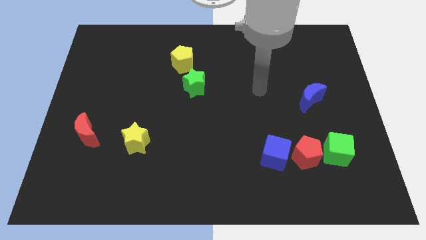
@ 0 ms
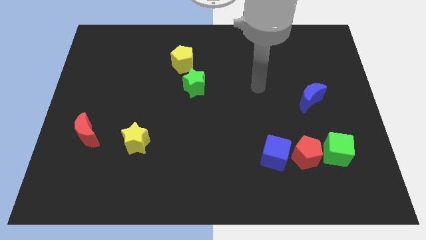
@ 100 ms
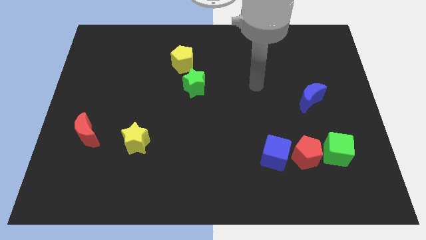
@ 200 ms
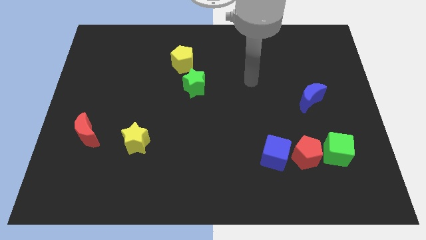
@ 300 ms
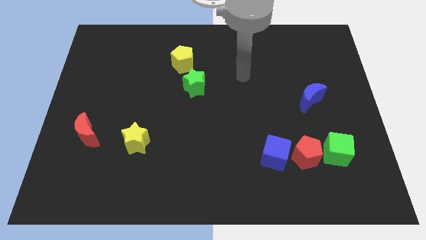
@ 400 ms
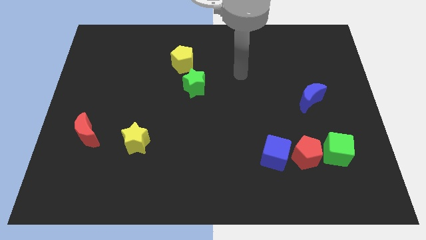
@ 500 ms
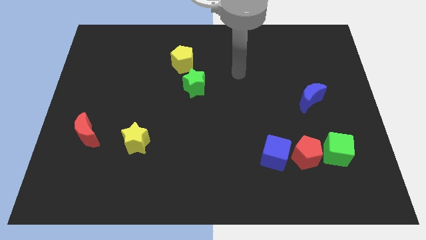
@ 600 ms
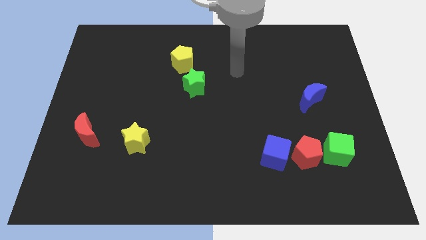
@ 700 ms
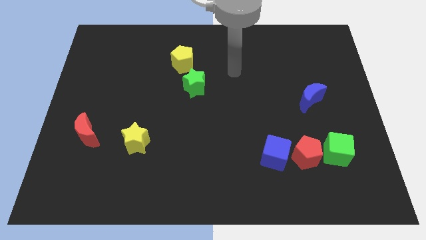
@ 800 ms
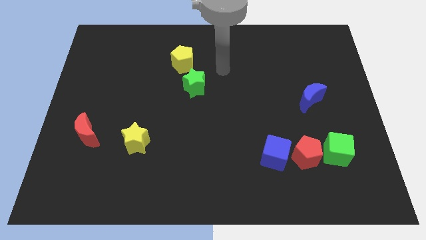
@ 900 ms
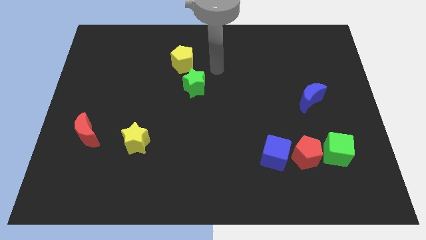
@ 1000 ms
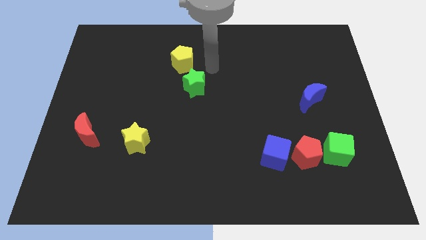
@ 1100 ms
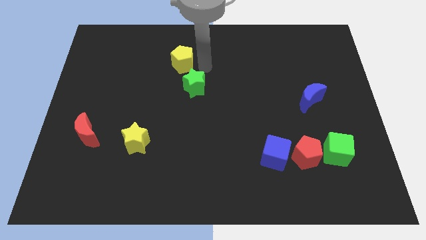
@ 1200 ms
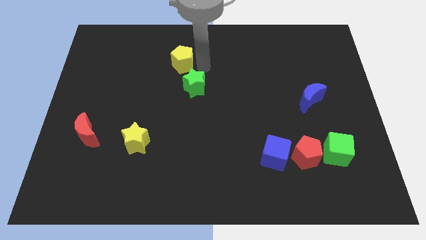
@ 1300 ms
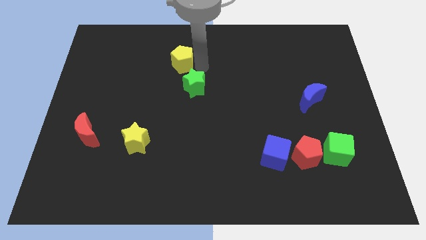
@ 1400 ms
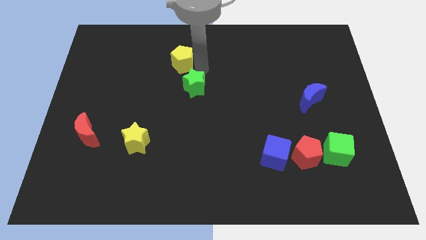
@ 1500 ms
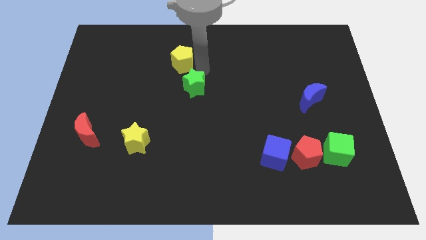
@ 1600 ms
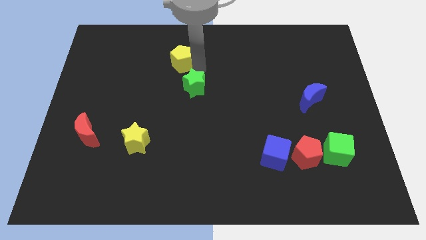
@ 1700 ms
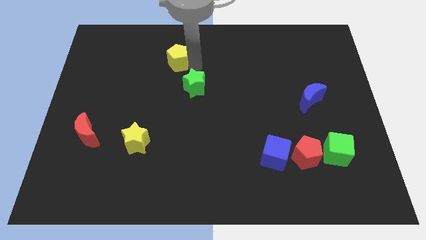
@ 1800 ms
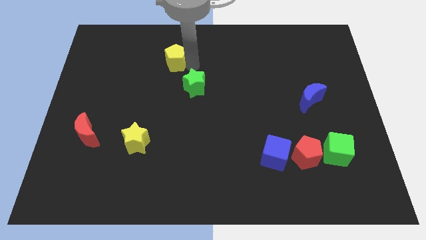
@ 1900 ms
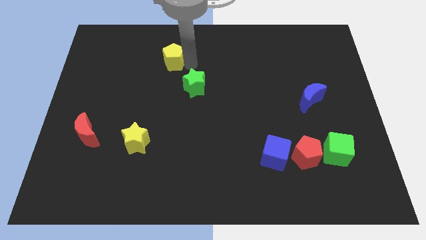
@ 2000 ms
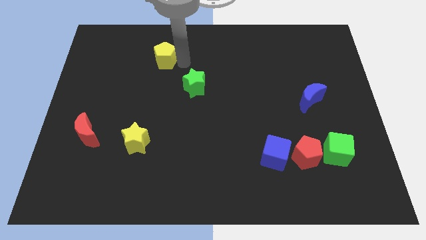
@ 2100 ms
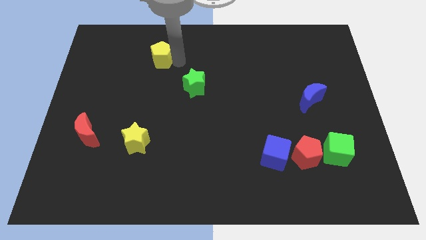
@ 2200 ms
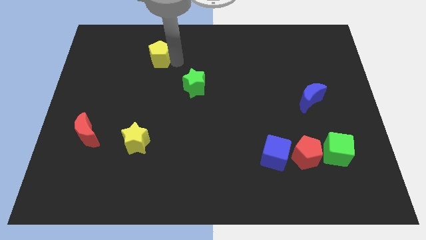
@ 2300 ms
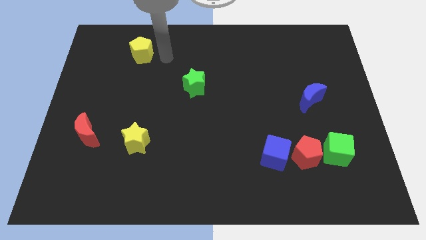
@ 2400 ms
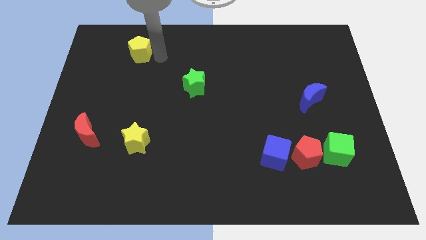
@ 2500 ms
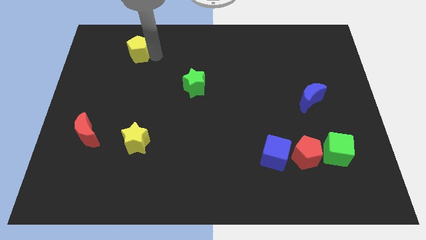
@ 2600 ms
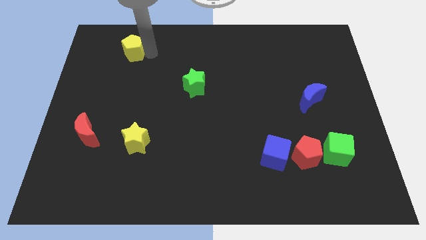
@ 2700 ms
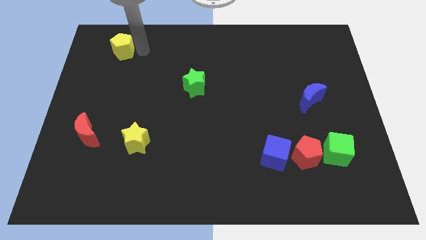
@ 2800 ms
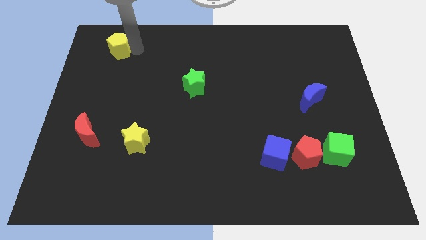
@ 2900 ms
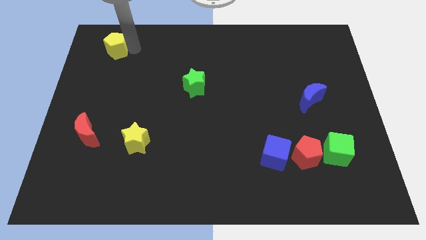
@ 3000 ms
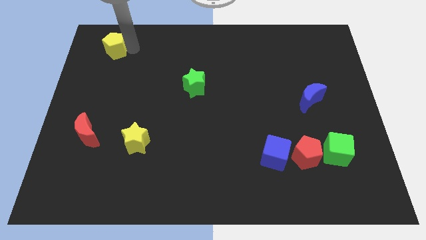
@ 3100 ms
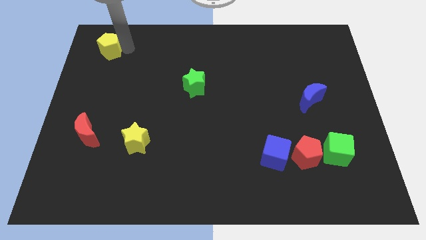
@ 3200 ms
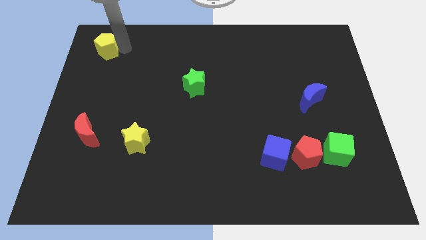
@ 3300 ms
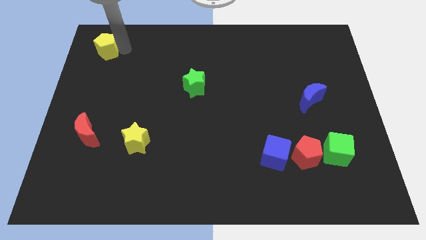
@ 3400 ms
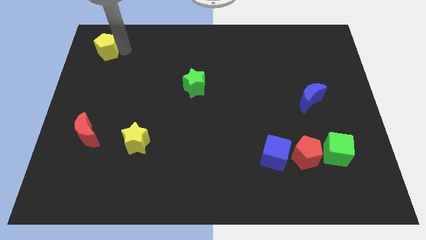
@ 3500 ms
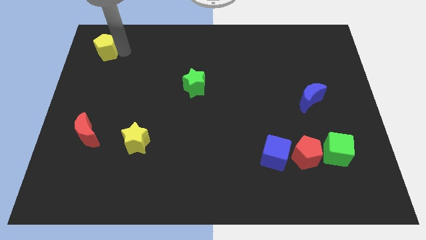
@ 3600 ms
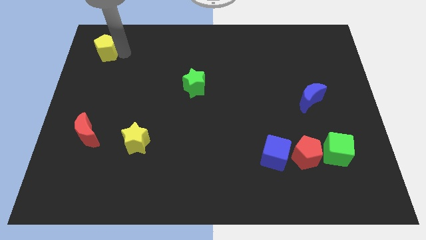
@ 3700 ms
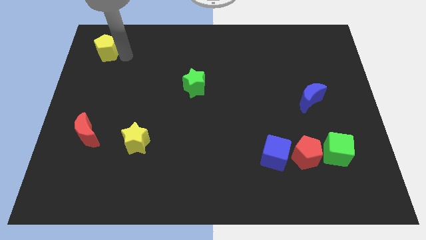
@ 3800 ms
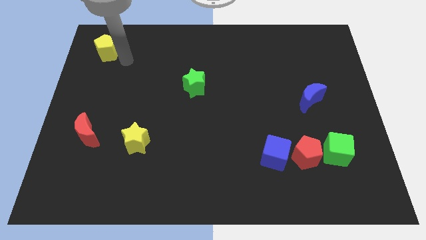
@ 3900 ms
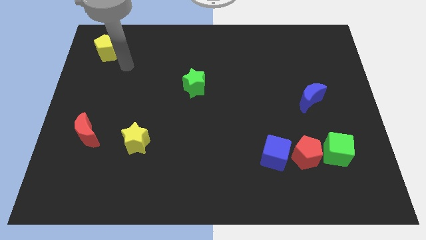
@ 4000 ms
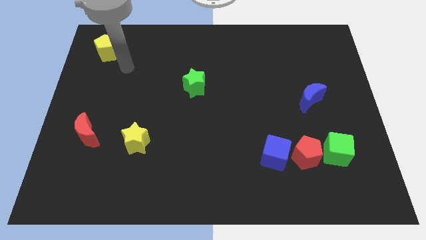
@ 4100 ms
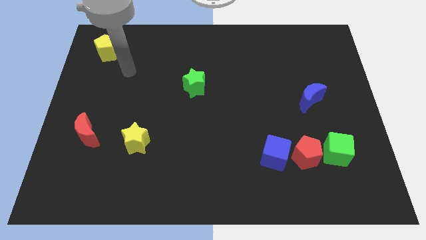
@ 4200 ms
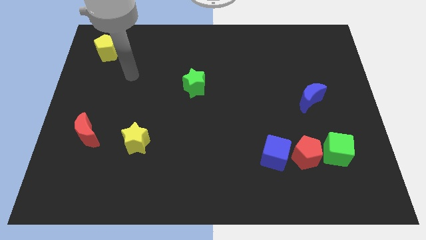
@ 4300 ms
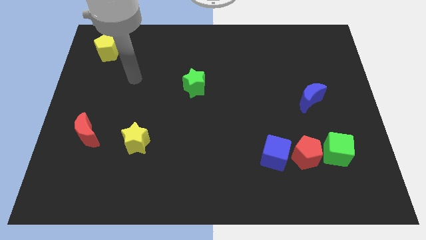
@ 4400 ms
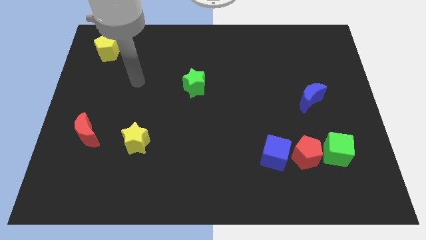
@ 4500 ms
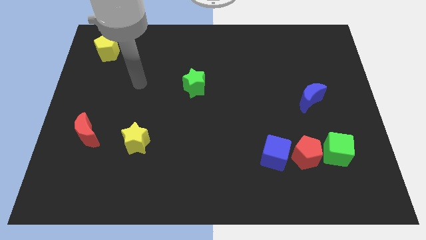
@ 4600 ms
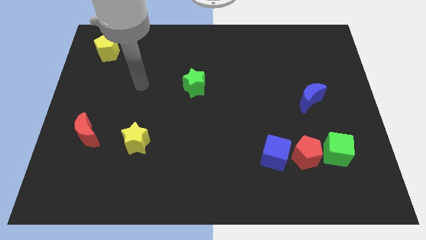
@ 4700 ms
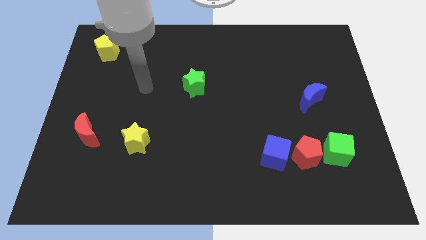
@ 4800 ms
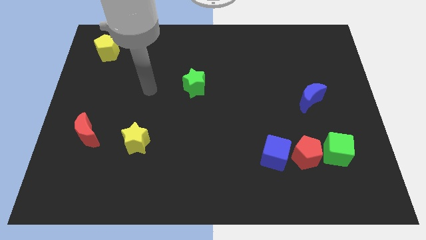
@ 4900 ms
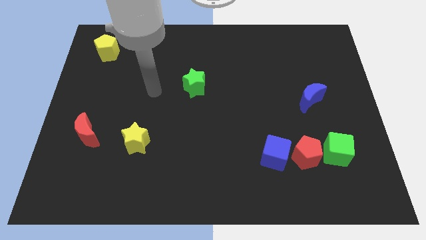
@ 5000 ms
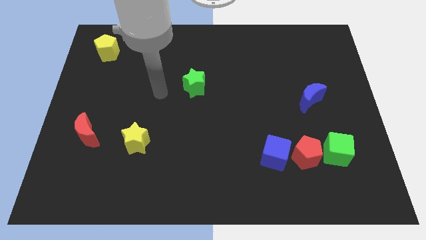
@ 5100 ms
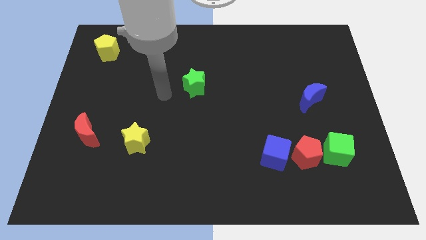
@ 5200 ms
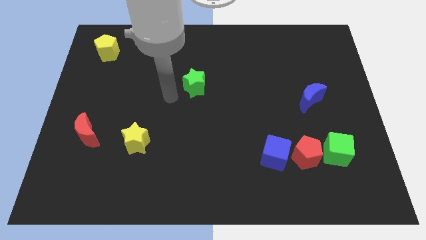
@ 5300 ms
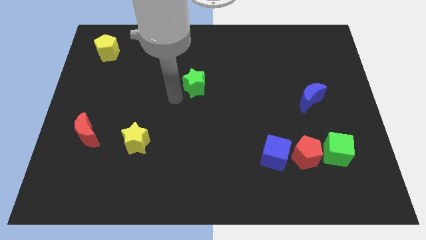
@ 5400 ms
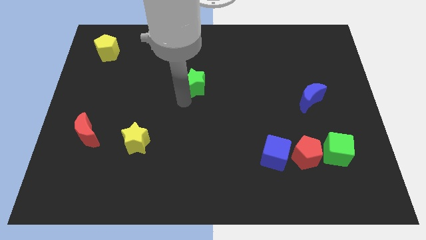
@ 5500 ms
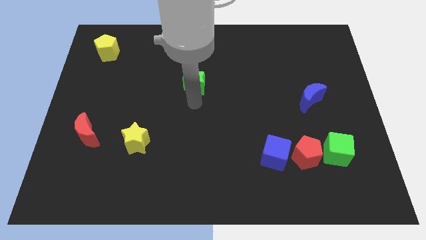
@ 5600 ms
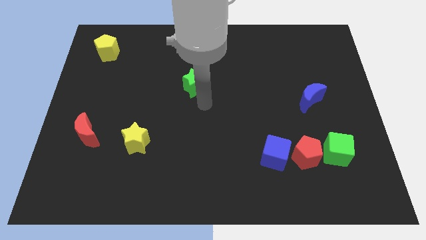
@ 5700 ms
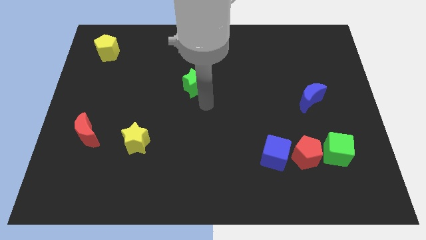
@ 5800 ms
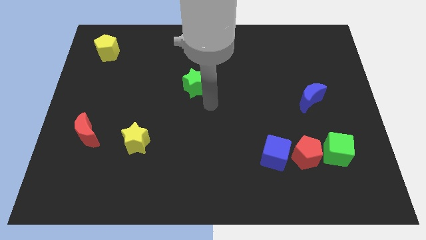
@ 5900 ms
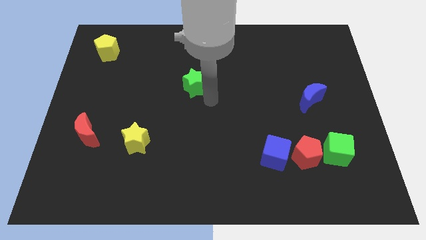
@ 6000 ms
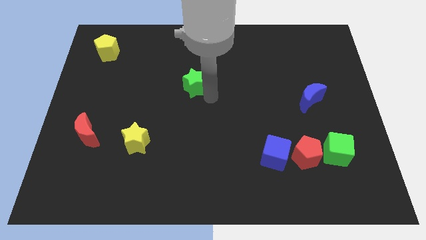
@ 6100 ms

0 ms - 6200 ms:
push the yellow pentagon to the top left corner of the board

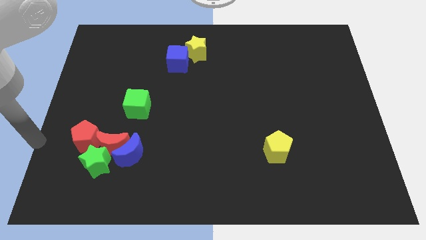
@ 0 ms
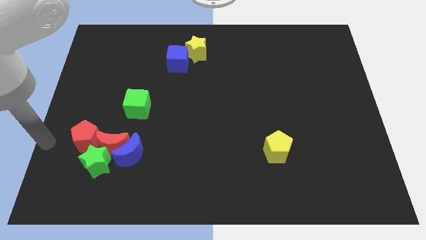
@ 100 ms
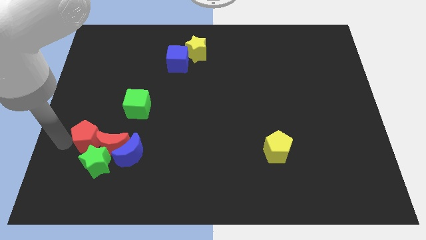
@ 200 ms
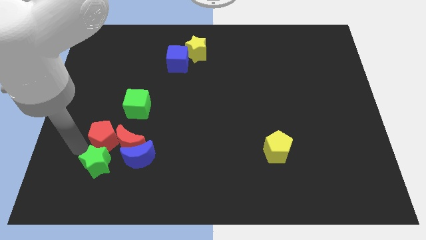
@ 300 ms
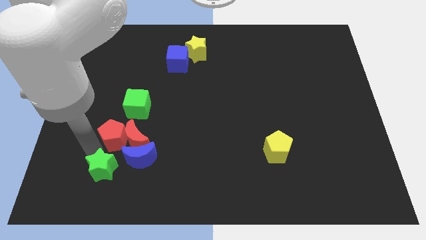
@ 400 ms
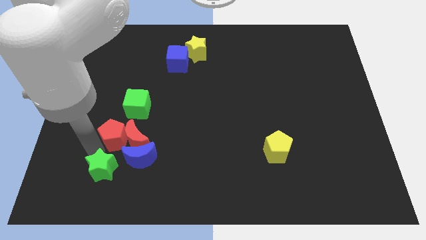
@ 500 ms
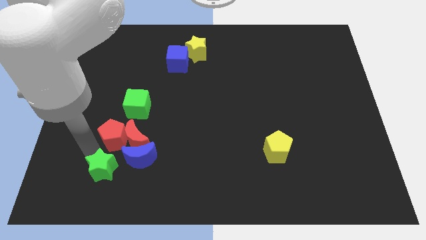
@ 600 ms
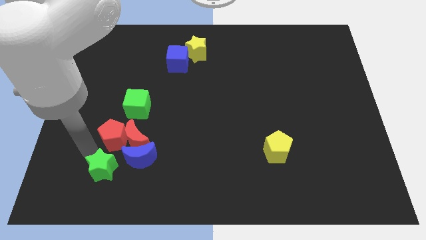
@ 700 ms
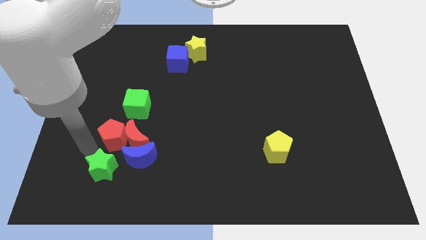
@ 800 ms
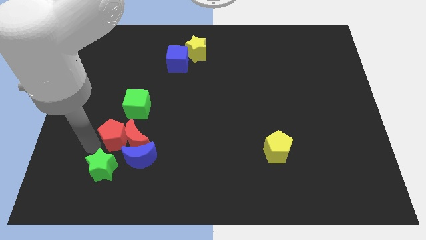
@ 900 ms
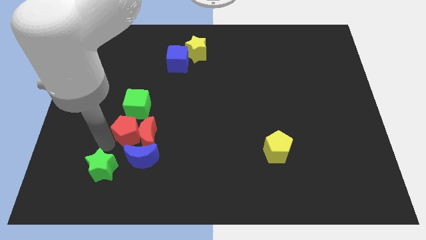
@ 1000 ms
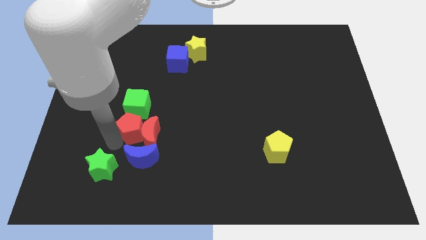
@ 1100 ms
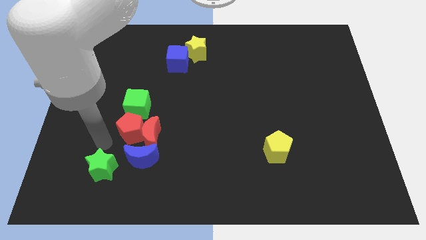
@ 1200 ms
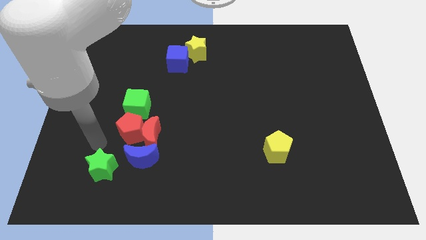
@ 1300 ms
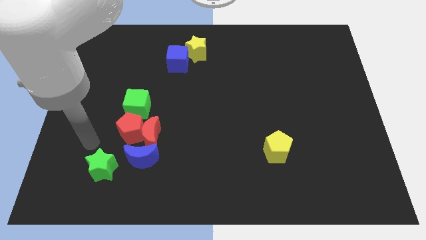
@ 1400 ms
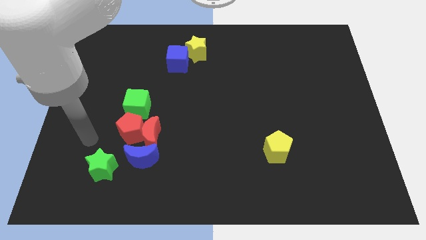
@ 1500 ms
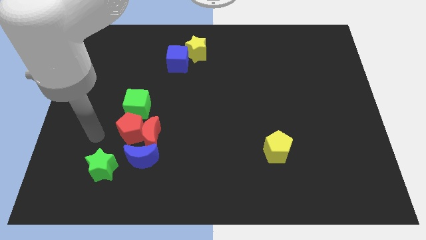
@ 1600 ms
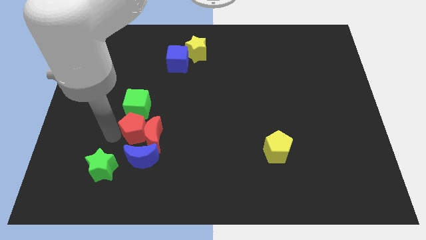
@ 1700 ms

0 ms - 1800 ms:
place the red pentagon at the bottom side of the green cube

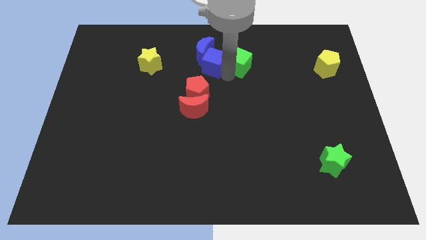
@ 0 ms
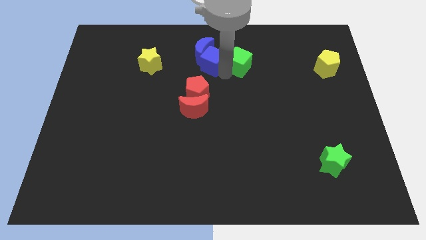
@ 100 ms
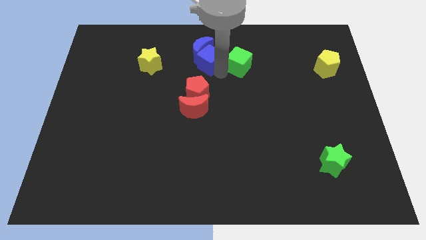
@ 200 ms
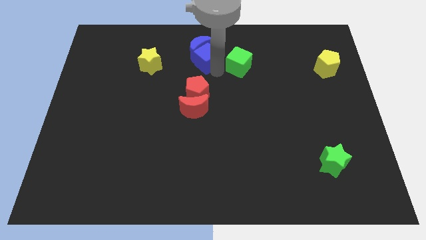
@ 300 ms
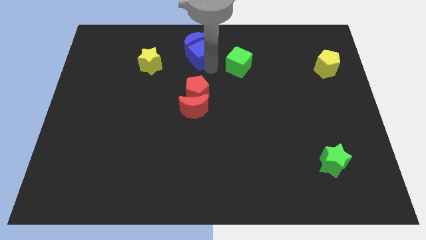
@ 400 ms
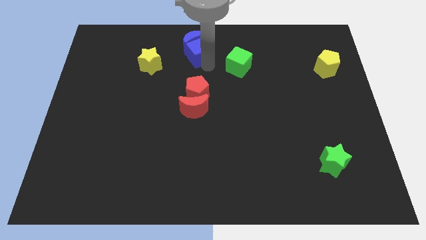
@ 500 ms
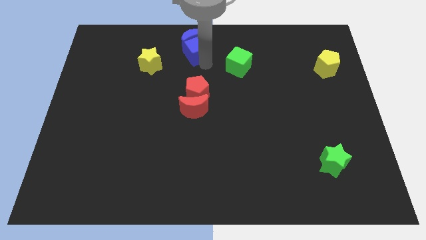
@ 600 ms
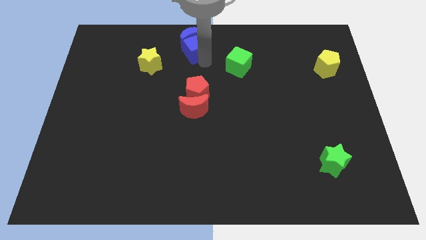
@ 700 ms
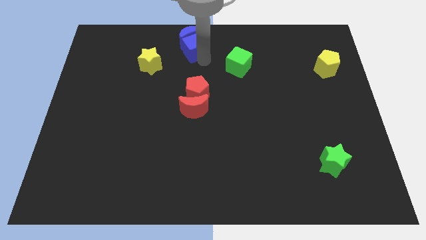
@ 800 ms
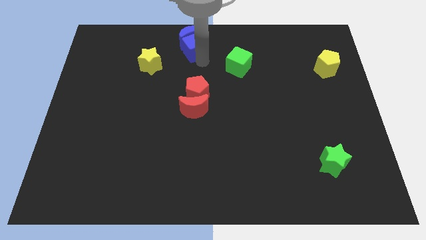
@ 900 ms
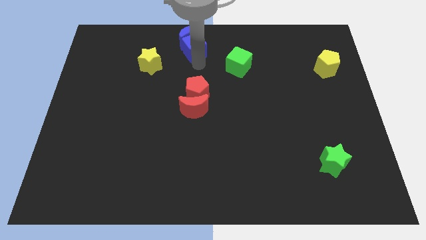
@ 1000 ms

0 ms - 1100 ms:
separate blue blocks from green cube
